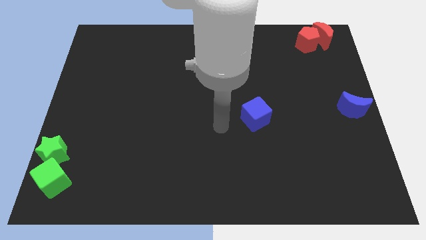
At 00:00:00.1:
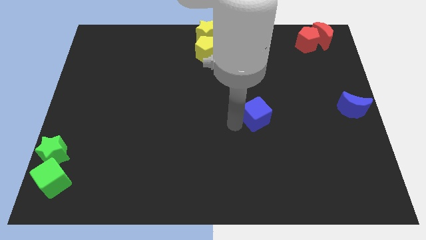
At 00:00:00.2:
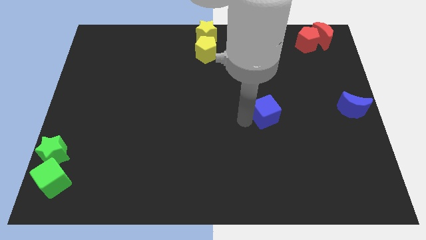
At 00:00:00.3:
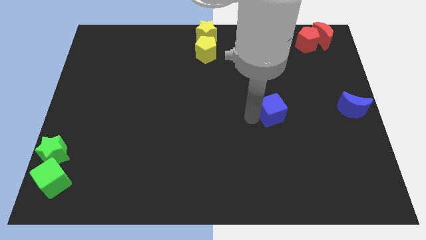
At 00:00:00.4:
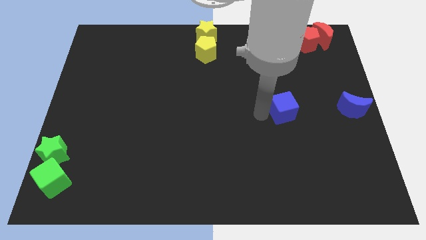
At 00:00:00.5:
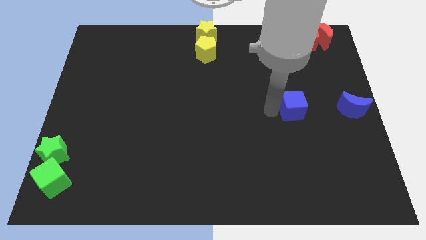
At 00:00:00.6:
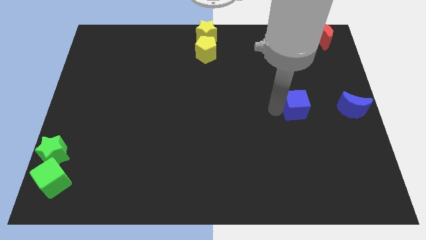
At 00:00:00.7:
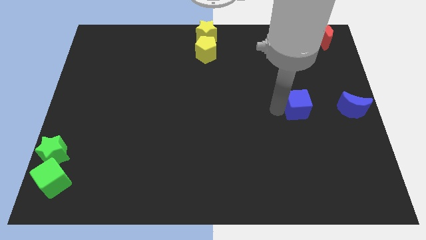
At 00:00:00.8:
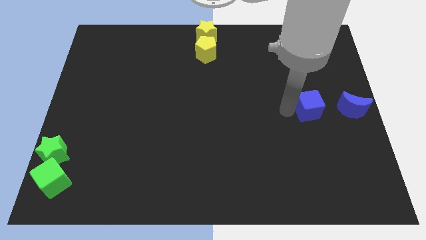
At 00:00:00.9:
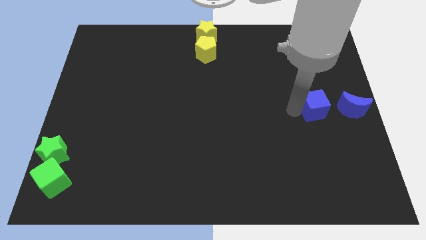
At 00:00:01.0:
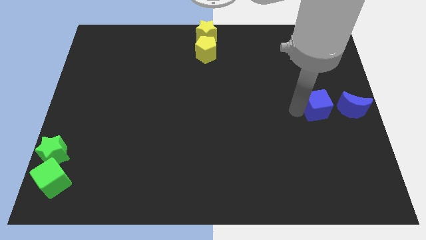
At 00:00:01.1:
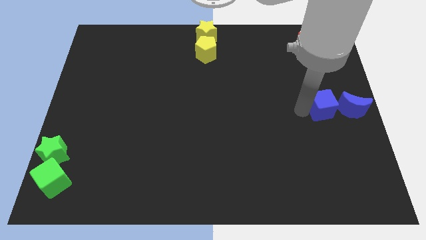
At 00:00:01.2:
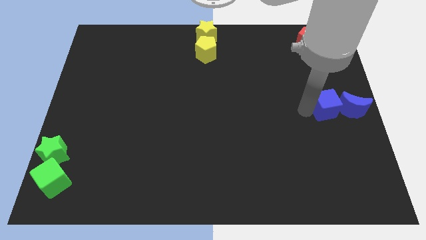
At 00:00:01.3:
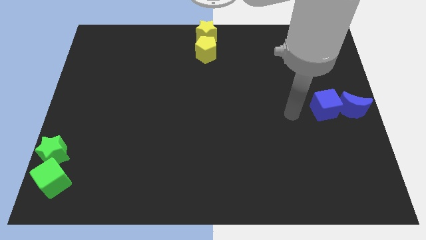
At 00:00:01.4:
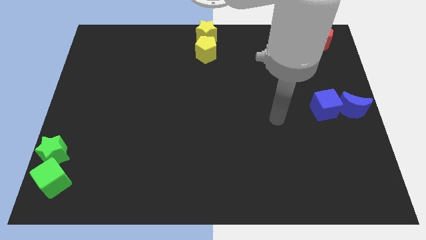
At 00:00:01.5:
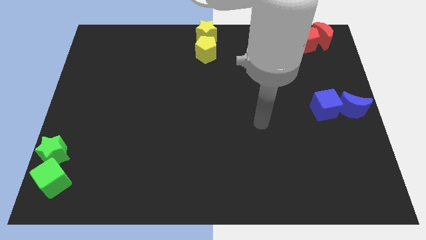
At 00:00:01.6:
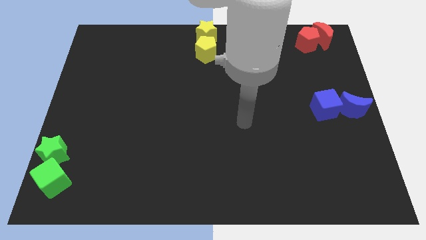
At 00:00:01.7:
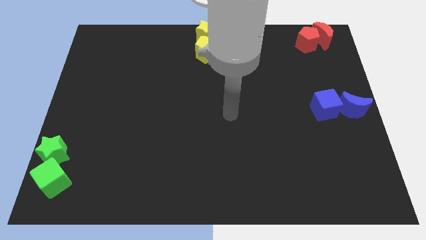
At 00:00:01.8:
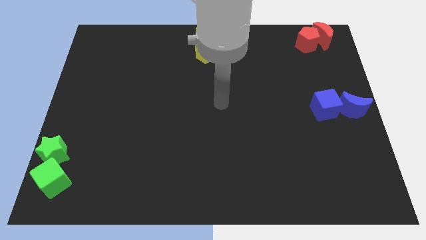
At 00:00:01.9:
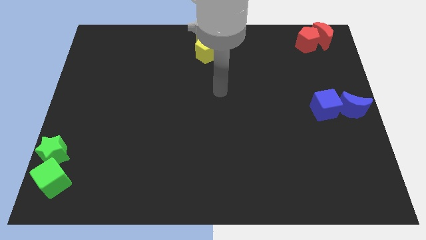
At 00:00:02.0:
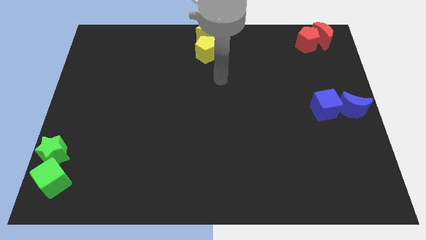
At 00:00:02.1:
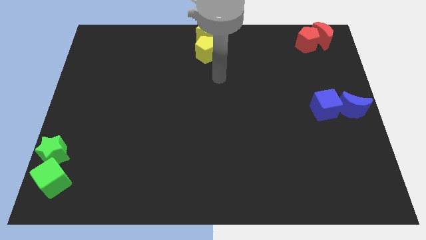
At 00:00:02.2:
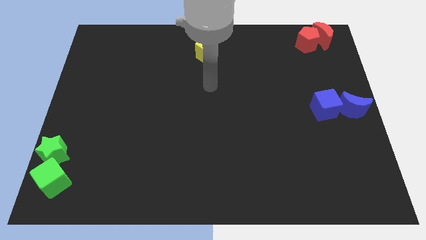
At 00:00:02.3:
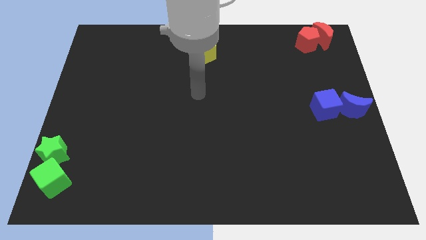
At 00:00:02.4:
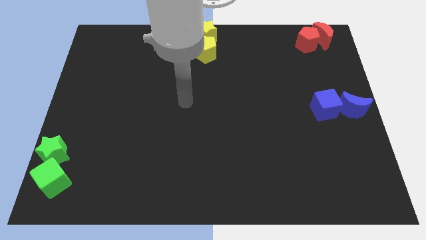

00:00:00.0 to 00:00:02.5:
move the blue cube close to the blue crescent

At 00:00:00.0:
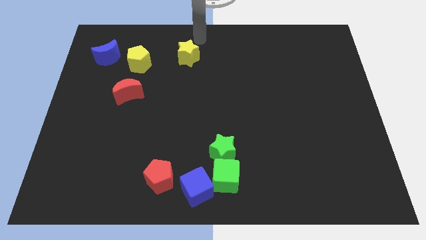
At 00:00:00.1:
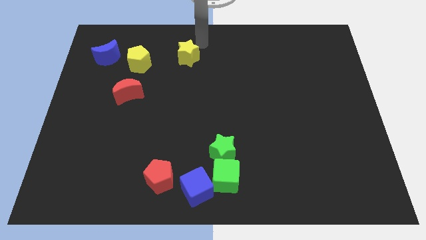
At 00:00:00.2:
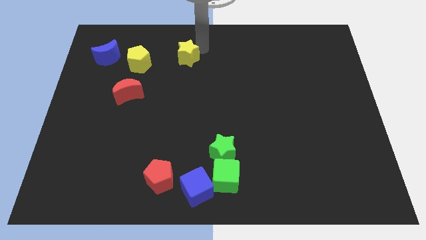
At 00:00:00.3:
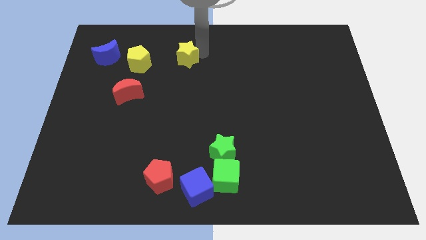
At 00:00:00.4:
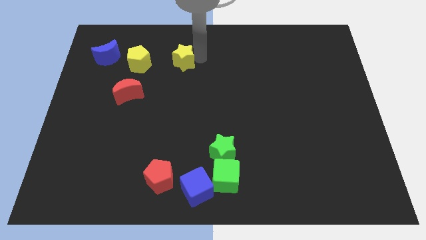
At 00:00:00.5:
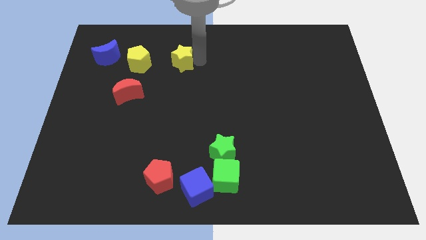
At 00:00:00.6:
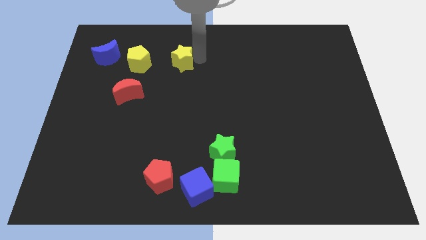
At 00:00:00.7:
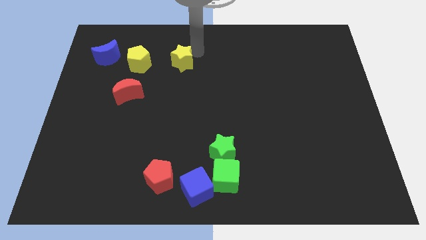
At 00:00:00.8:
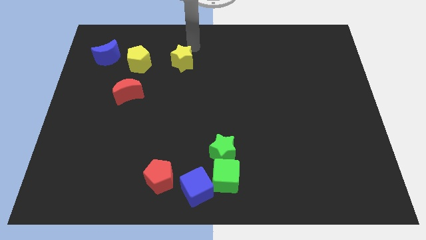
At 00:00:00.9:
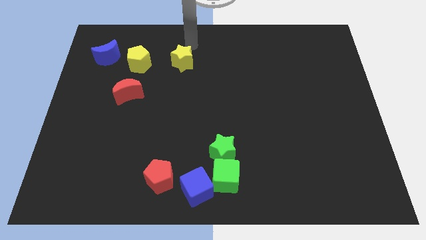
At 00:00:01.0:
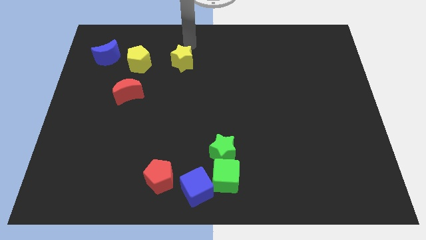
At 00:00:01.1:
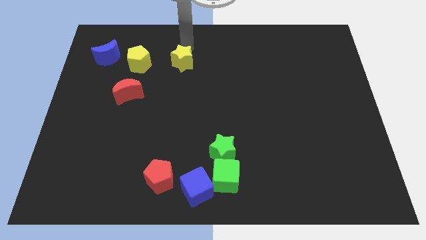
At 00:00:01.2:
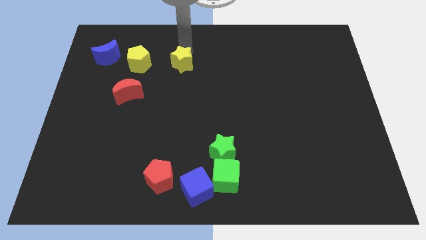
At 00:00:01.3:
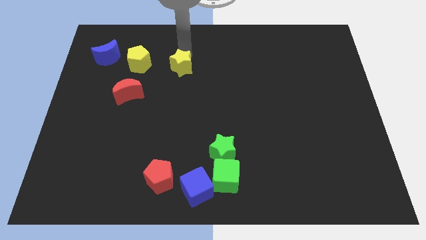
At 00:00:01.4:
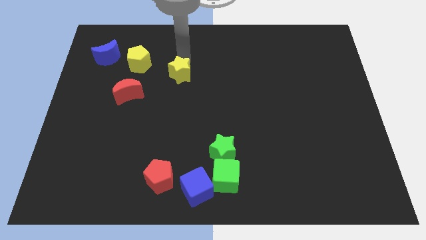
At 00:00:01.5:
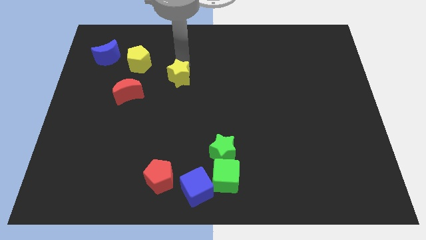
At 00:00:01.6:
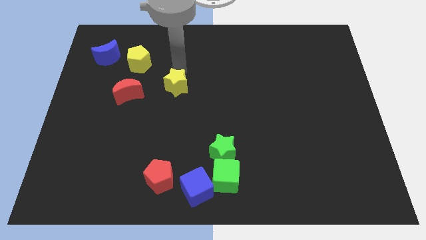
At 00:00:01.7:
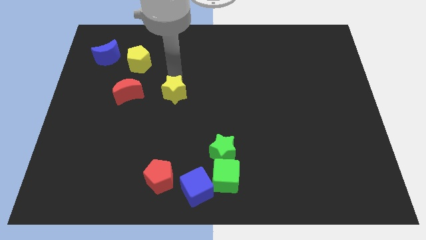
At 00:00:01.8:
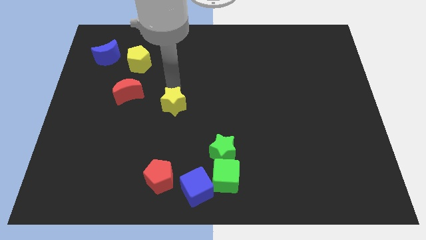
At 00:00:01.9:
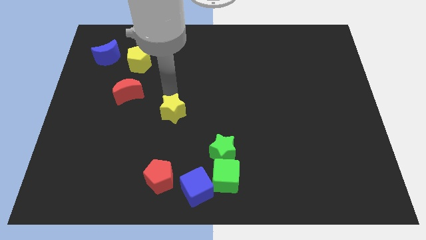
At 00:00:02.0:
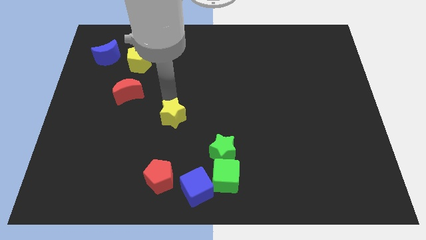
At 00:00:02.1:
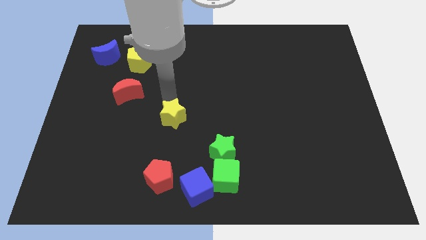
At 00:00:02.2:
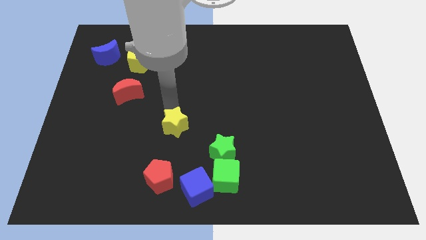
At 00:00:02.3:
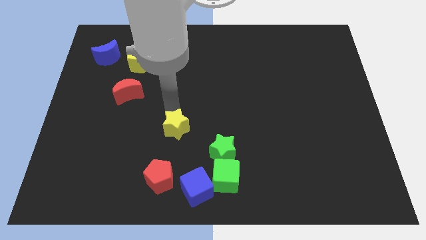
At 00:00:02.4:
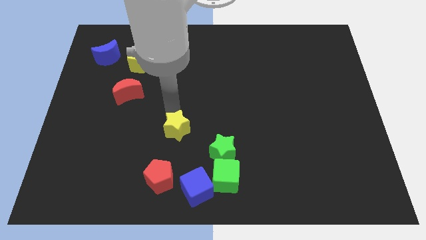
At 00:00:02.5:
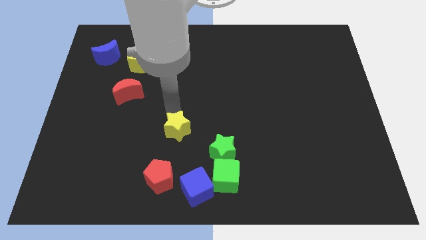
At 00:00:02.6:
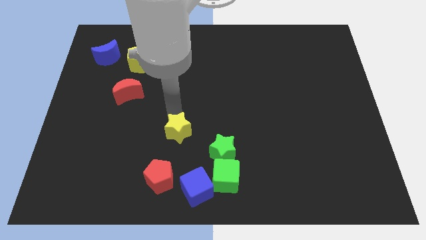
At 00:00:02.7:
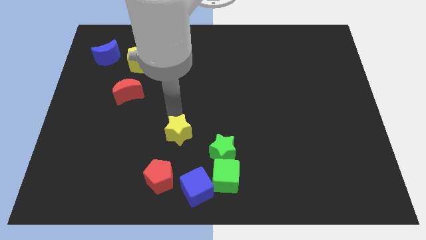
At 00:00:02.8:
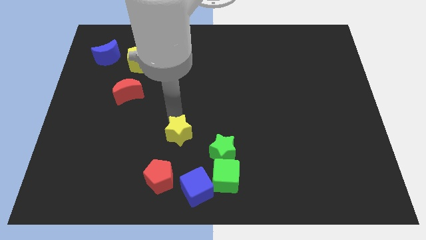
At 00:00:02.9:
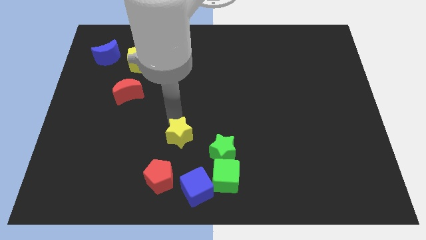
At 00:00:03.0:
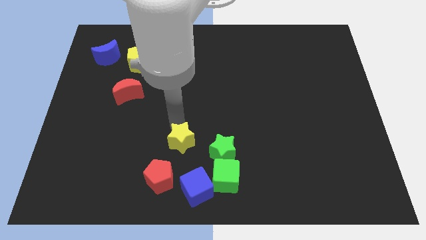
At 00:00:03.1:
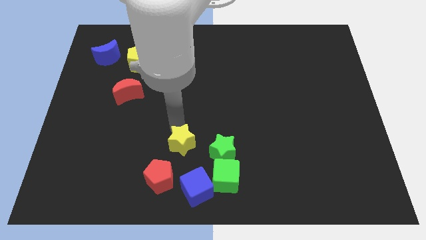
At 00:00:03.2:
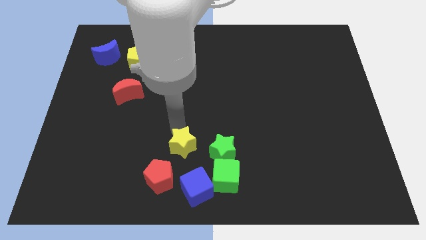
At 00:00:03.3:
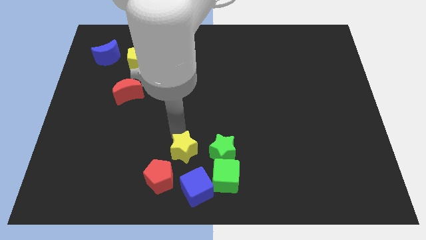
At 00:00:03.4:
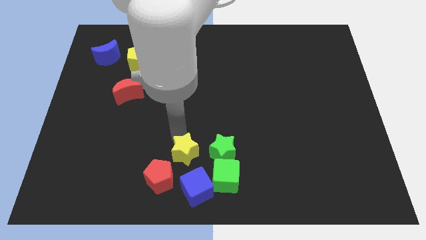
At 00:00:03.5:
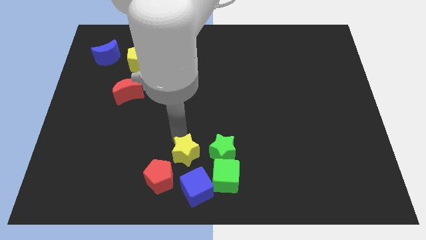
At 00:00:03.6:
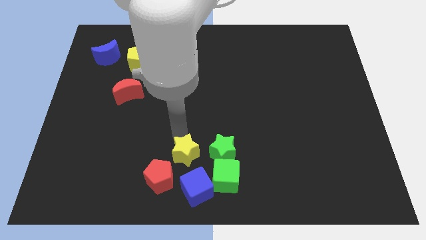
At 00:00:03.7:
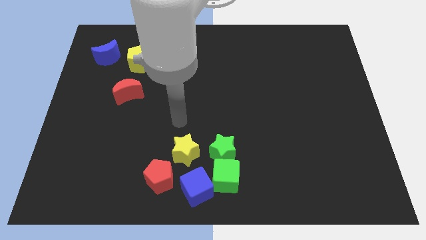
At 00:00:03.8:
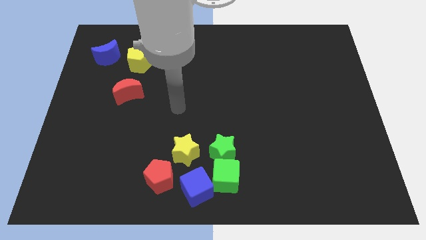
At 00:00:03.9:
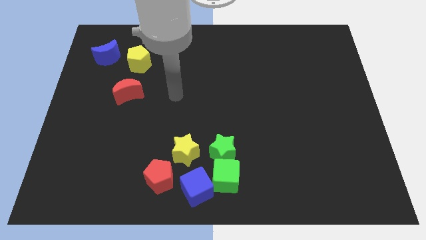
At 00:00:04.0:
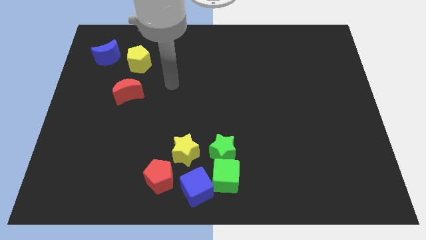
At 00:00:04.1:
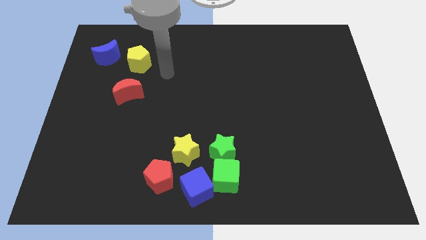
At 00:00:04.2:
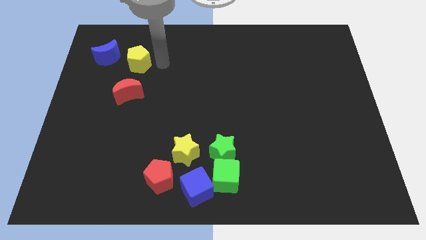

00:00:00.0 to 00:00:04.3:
place the yellow star to the left of the green star

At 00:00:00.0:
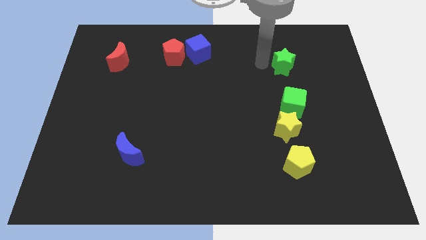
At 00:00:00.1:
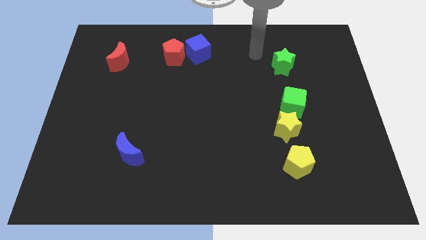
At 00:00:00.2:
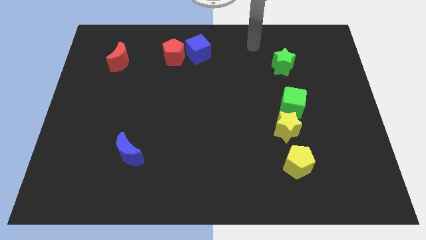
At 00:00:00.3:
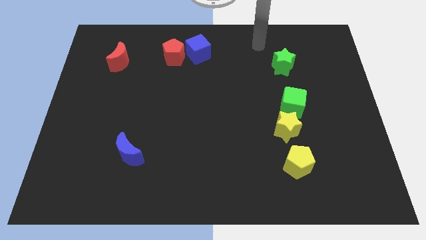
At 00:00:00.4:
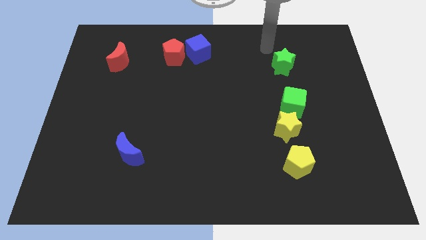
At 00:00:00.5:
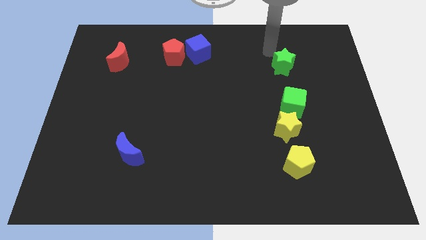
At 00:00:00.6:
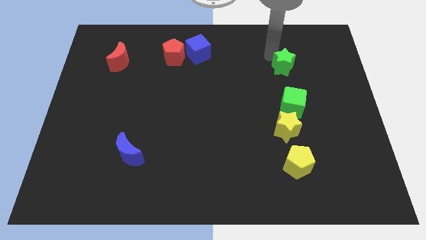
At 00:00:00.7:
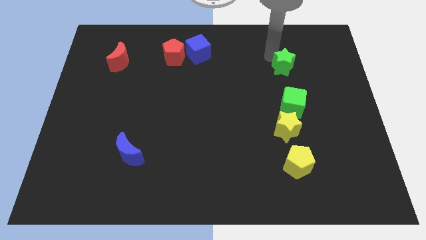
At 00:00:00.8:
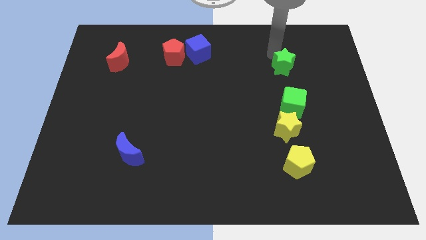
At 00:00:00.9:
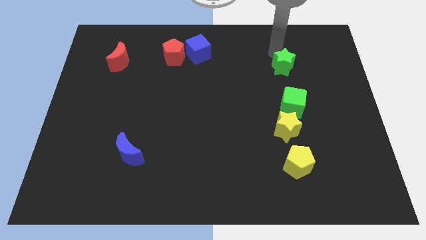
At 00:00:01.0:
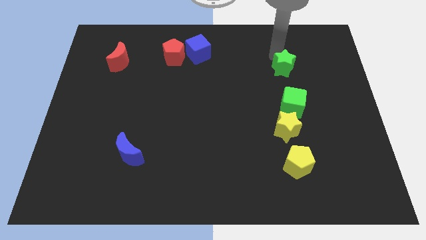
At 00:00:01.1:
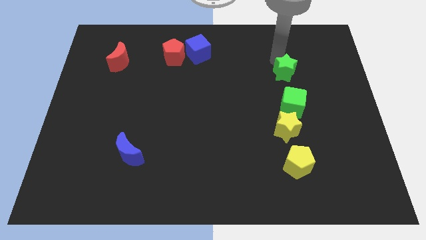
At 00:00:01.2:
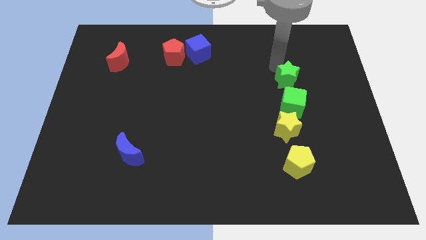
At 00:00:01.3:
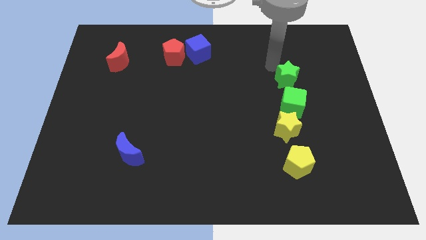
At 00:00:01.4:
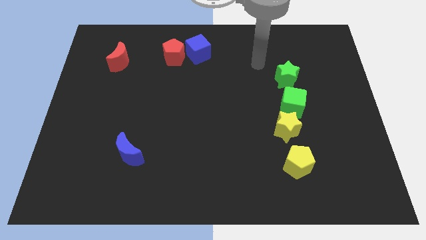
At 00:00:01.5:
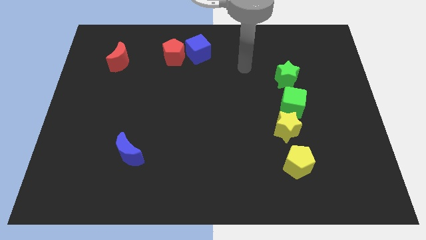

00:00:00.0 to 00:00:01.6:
slide the green star towards the top side of the green cube

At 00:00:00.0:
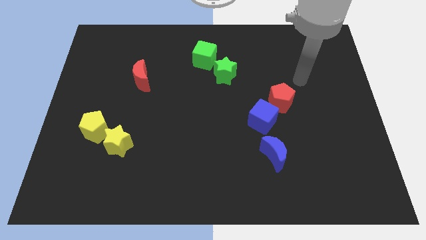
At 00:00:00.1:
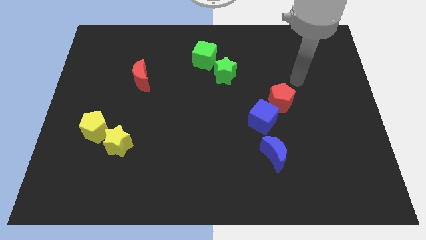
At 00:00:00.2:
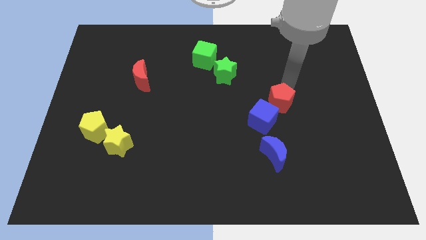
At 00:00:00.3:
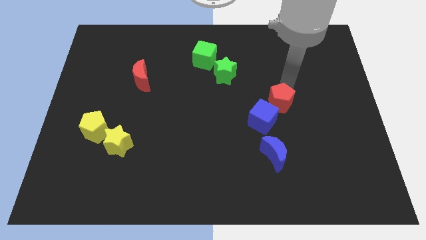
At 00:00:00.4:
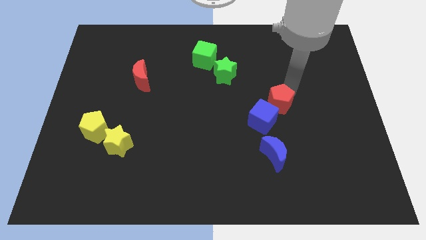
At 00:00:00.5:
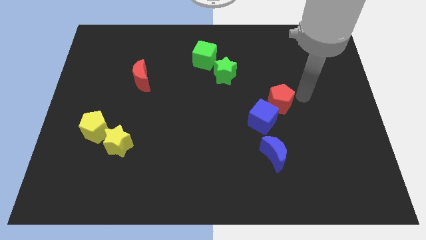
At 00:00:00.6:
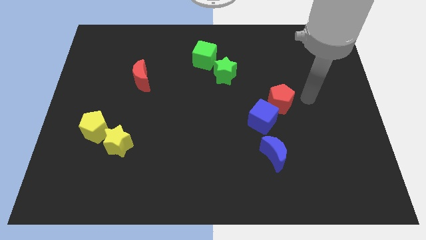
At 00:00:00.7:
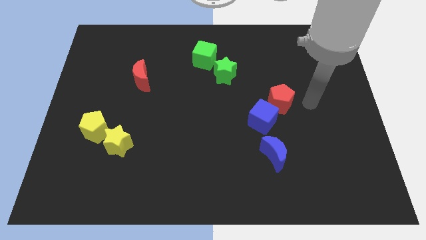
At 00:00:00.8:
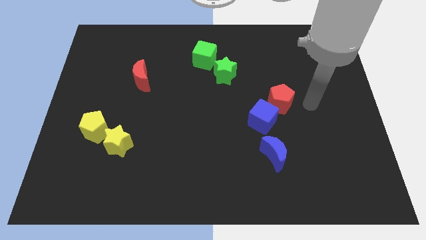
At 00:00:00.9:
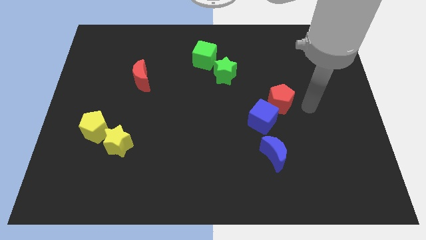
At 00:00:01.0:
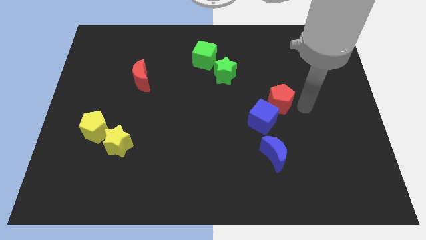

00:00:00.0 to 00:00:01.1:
tap the red pentagon
